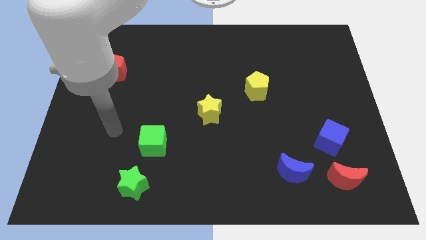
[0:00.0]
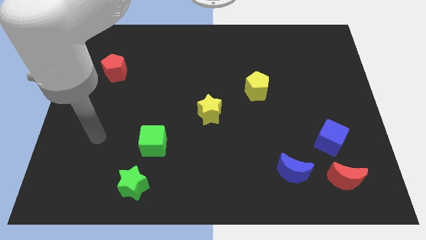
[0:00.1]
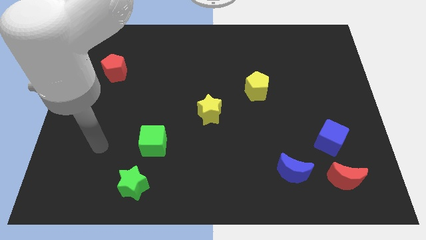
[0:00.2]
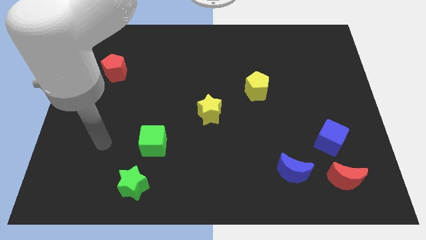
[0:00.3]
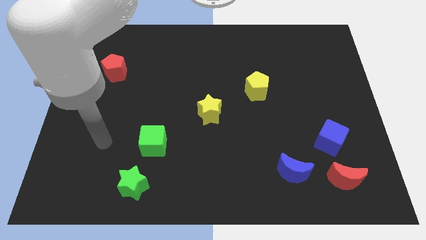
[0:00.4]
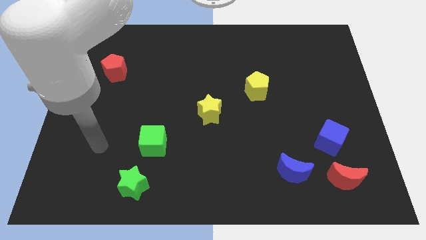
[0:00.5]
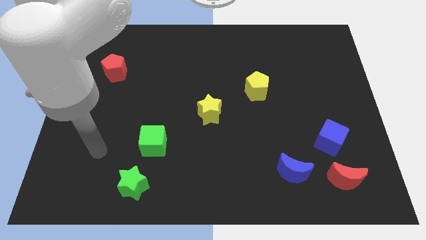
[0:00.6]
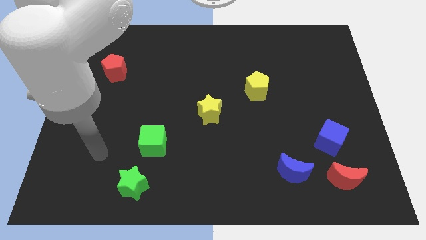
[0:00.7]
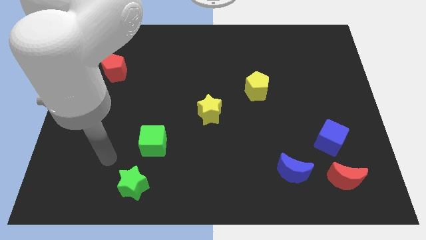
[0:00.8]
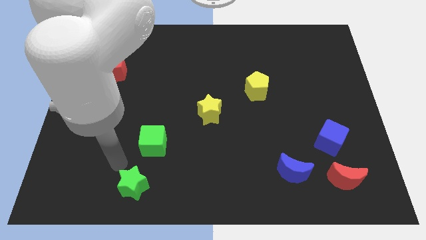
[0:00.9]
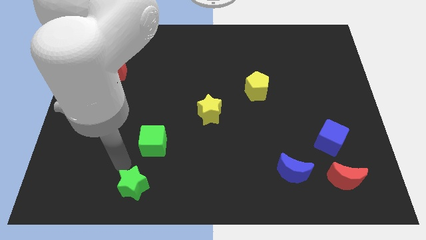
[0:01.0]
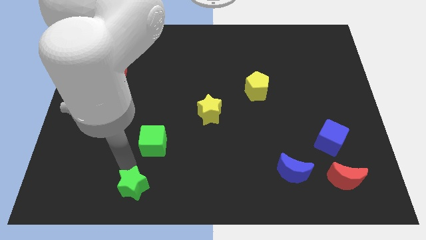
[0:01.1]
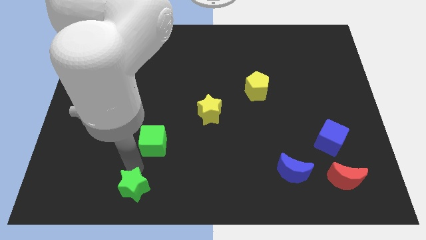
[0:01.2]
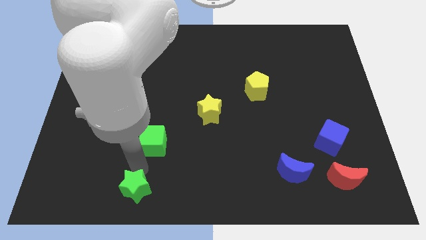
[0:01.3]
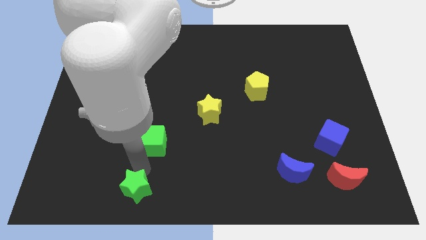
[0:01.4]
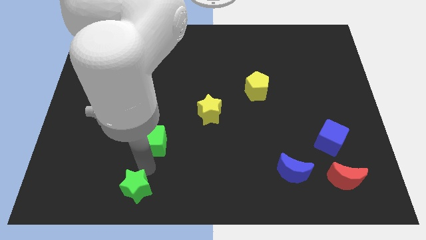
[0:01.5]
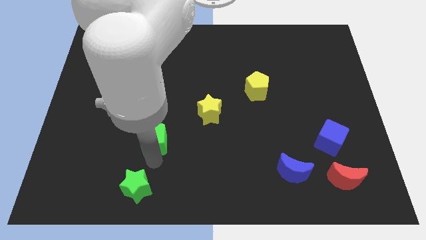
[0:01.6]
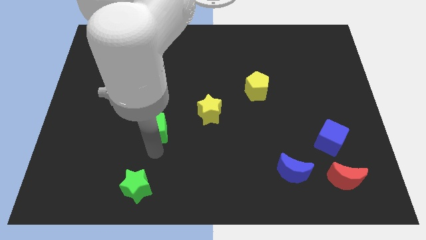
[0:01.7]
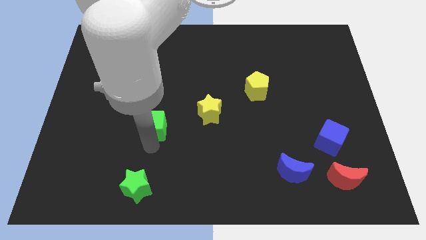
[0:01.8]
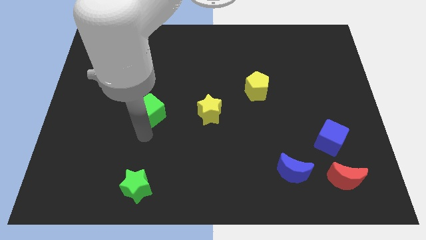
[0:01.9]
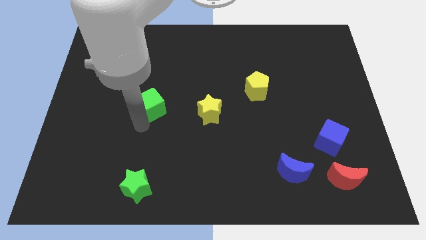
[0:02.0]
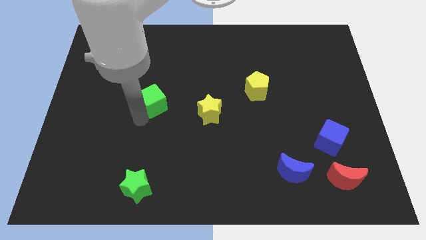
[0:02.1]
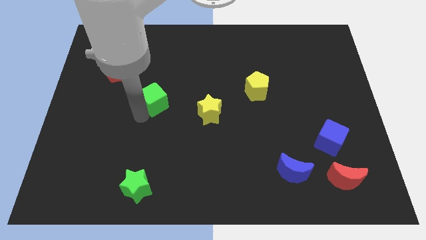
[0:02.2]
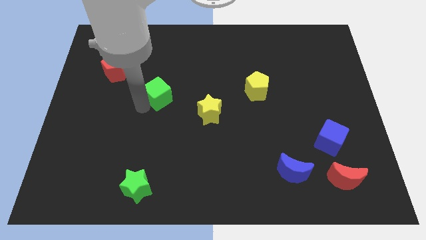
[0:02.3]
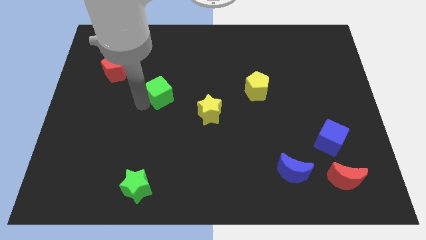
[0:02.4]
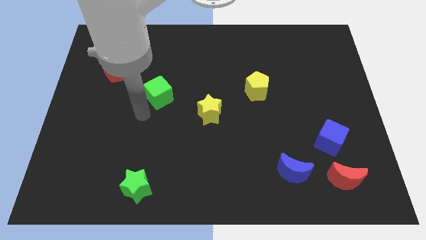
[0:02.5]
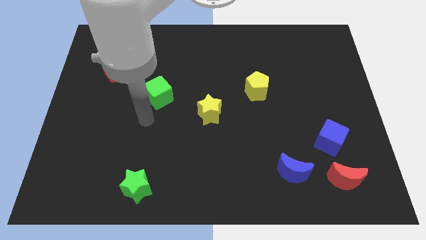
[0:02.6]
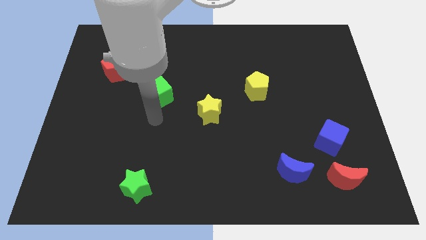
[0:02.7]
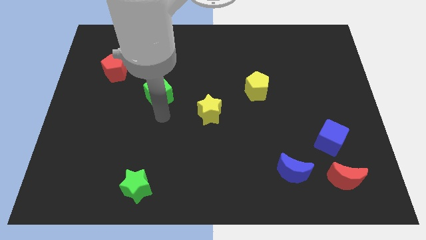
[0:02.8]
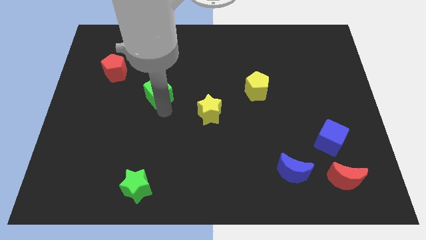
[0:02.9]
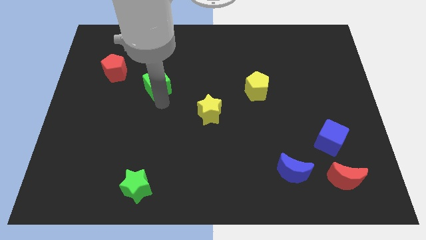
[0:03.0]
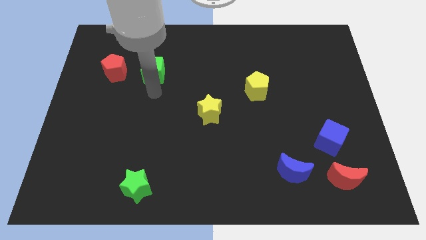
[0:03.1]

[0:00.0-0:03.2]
push the green cube in between the yellow star and red pentagon

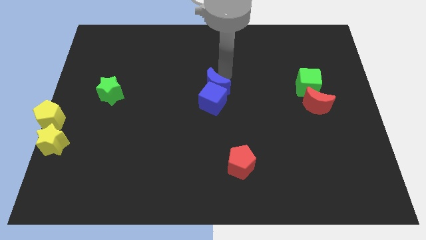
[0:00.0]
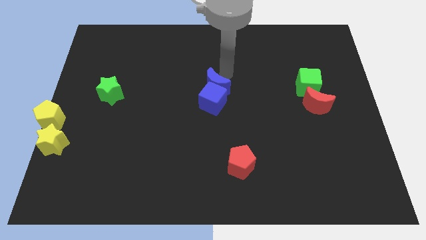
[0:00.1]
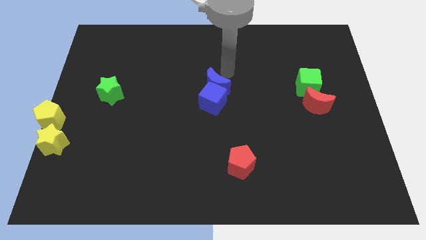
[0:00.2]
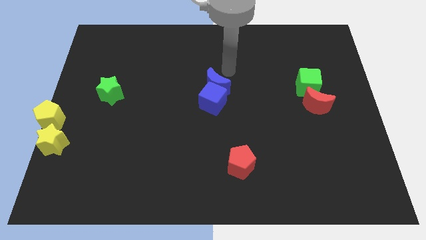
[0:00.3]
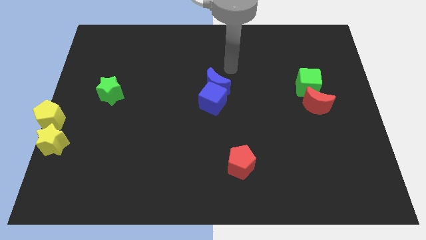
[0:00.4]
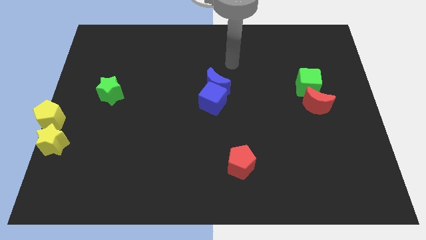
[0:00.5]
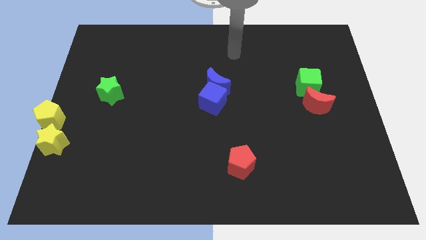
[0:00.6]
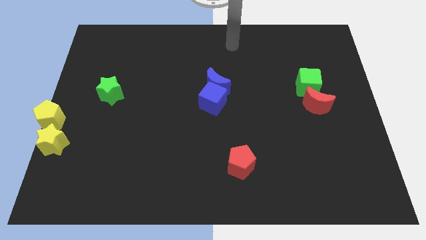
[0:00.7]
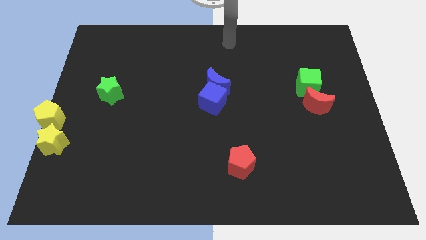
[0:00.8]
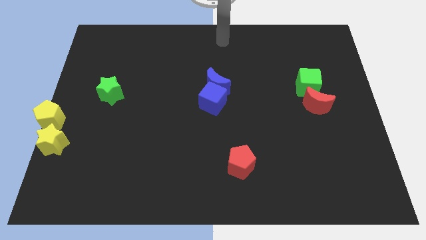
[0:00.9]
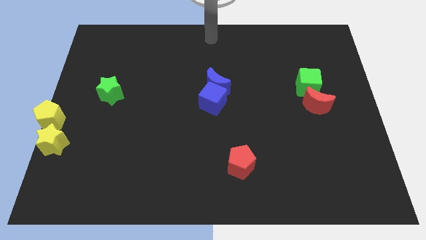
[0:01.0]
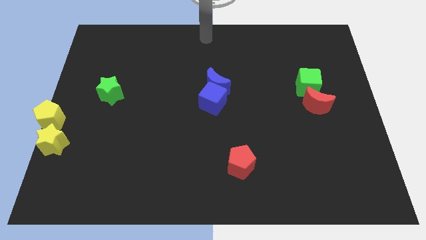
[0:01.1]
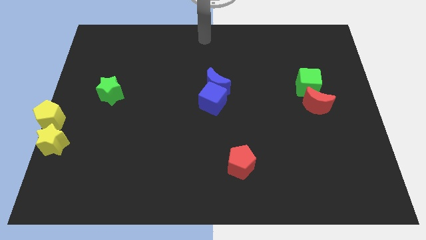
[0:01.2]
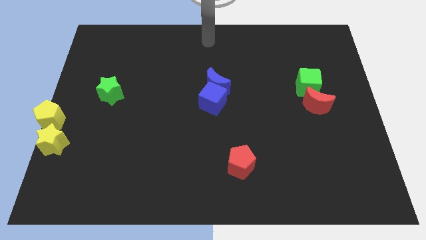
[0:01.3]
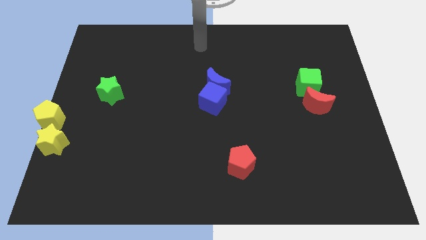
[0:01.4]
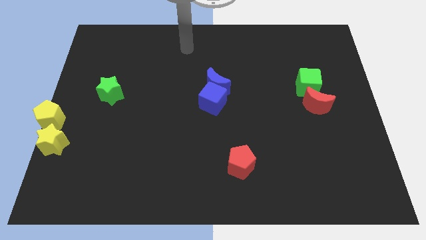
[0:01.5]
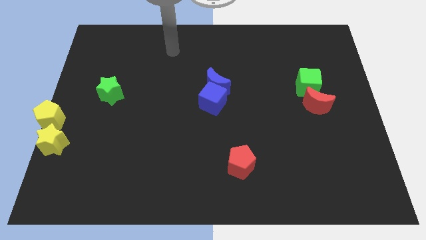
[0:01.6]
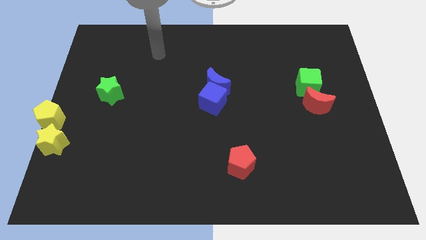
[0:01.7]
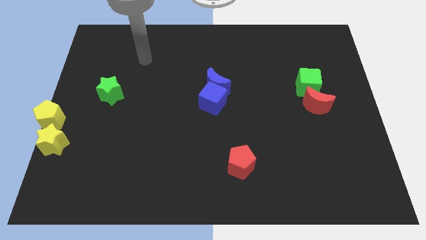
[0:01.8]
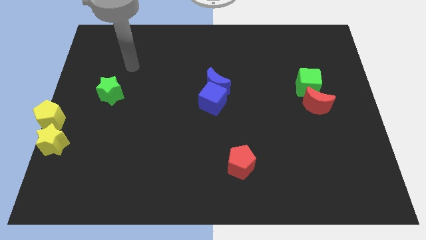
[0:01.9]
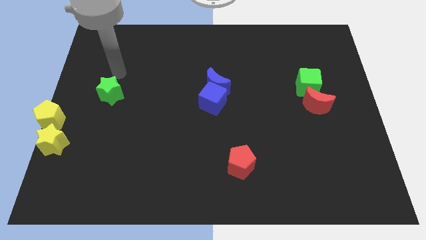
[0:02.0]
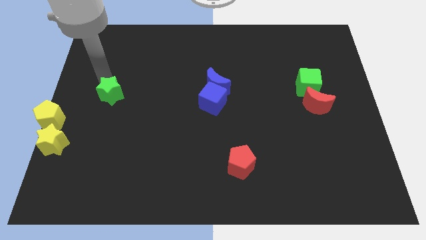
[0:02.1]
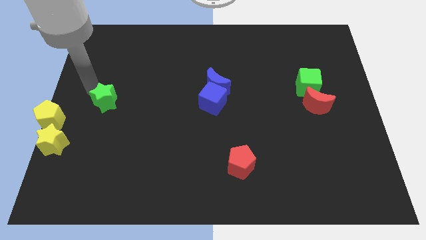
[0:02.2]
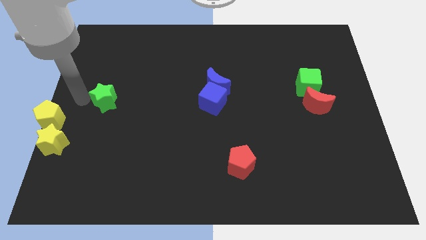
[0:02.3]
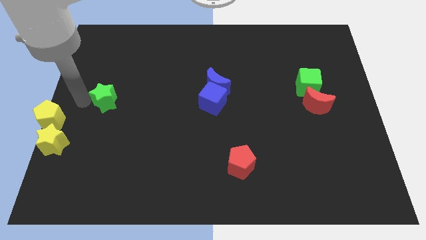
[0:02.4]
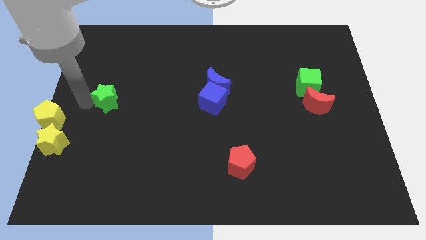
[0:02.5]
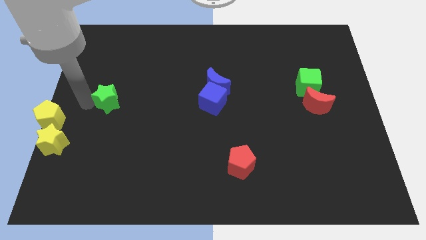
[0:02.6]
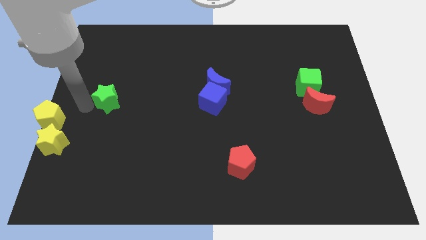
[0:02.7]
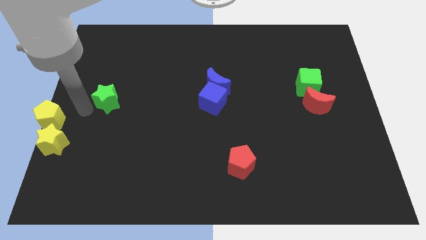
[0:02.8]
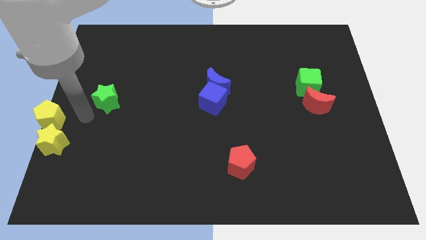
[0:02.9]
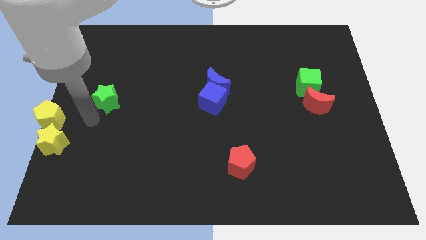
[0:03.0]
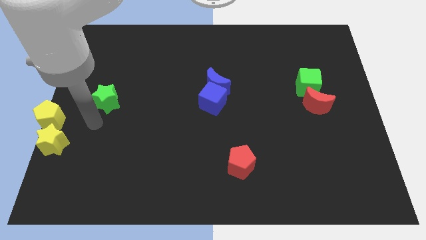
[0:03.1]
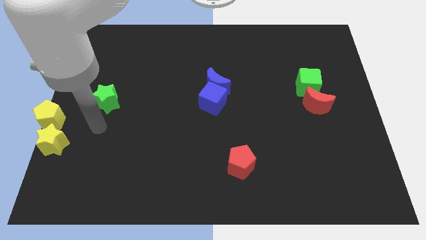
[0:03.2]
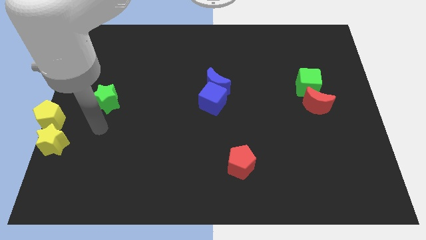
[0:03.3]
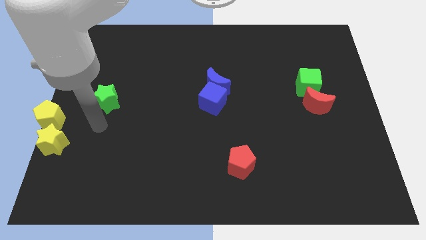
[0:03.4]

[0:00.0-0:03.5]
slightly touch the green star

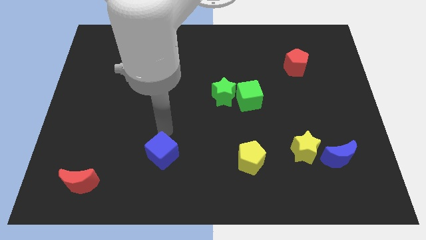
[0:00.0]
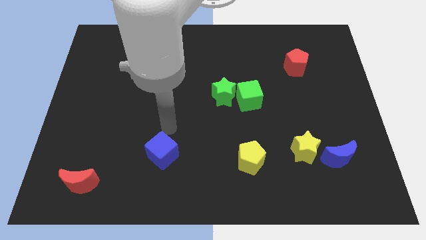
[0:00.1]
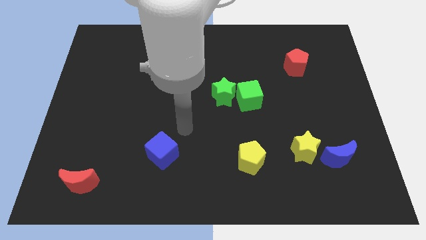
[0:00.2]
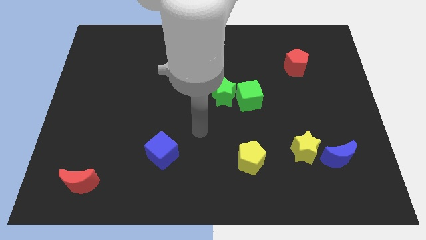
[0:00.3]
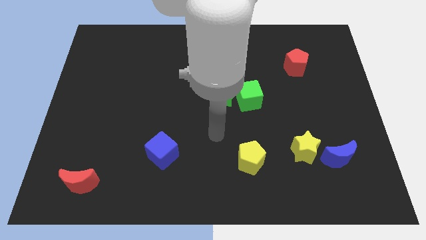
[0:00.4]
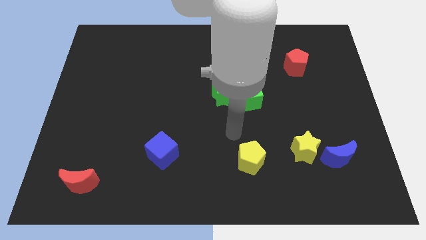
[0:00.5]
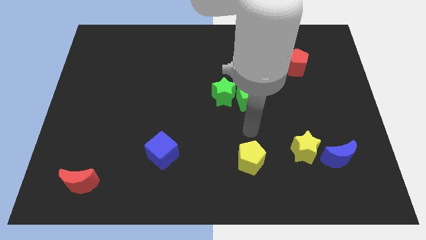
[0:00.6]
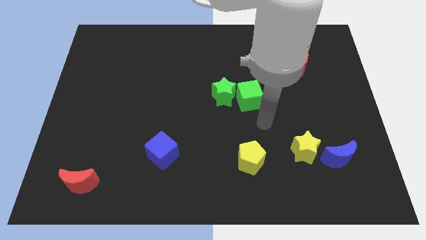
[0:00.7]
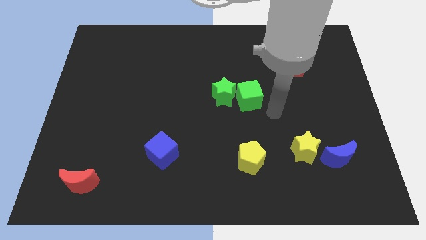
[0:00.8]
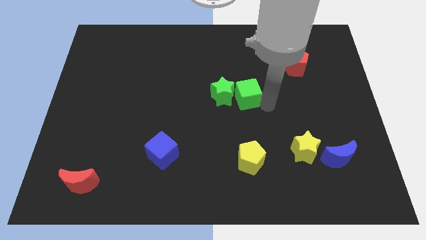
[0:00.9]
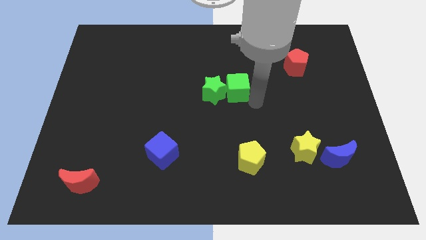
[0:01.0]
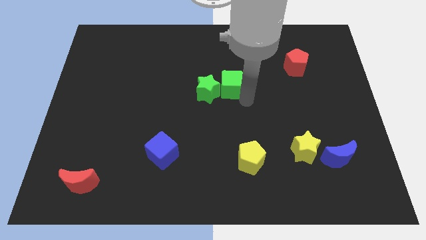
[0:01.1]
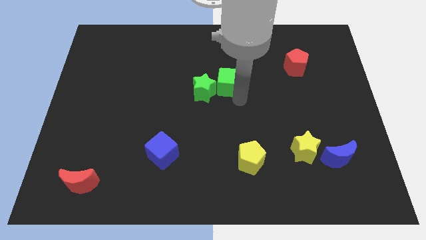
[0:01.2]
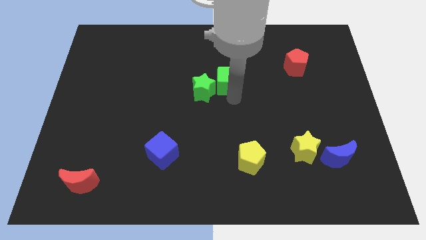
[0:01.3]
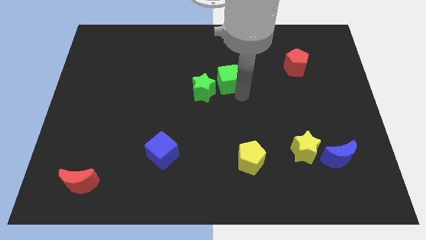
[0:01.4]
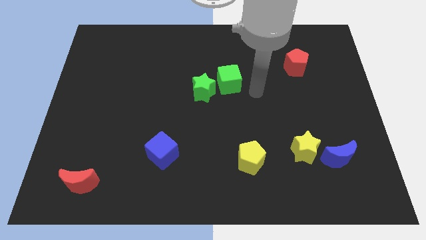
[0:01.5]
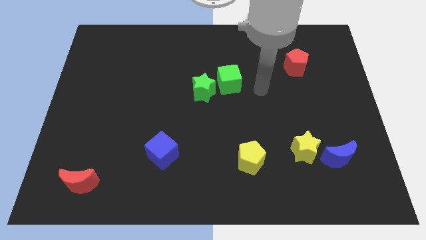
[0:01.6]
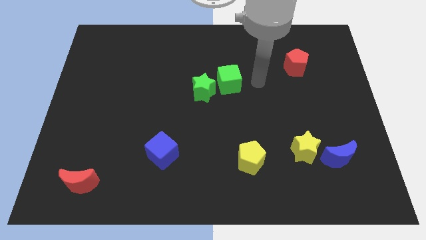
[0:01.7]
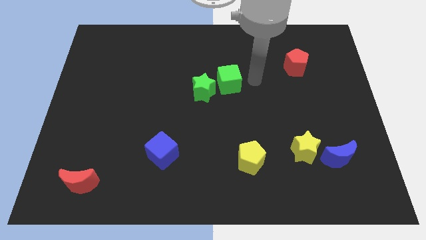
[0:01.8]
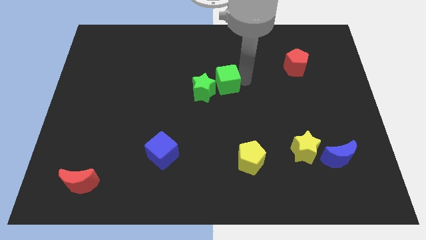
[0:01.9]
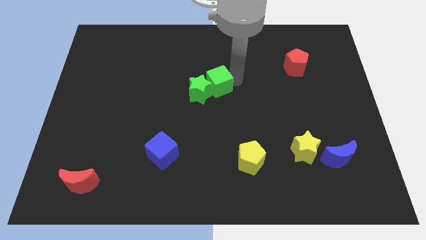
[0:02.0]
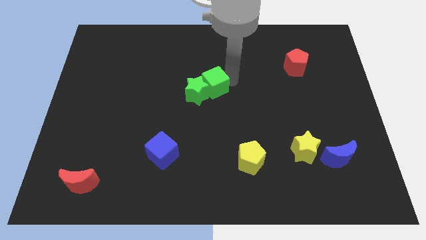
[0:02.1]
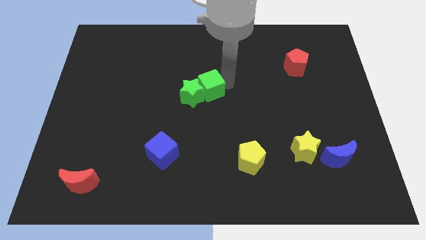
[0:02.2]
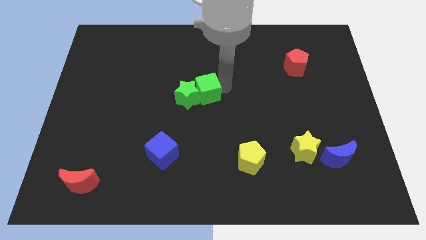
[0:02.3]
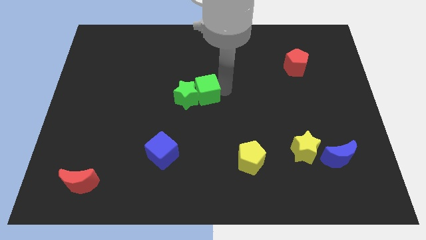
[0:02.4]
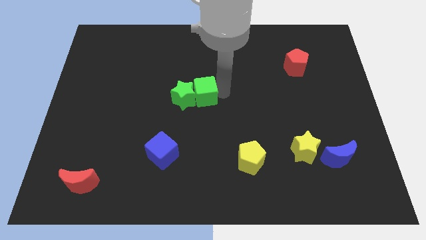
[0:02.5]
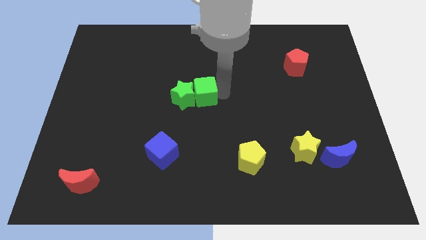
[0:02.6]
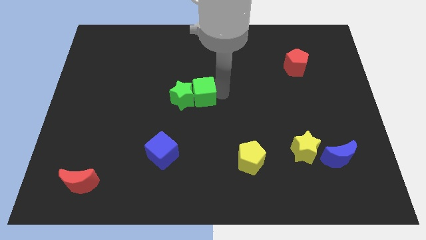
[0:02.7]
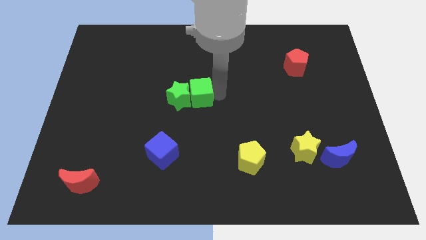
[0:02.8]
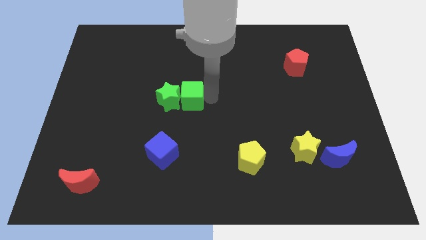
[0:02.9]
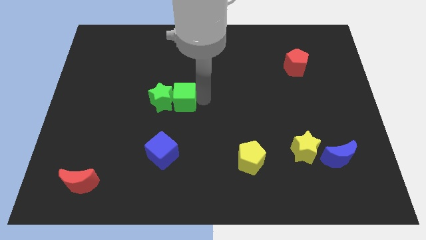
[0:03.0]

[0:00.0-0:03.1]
push the green things to the left side of the table
